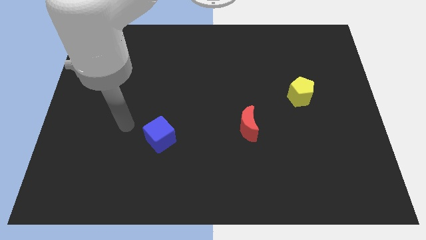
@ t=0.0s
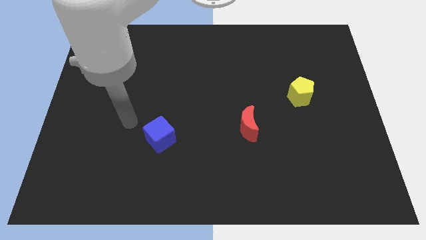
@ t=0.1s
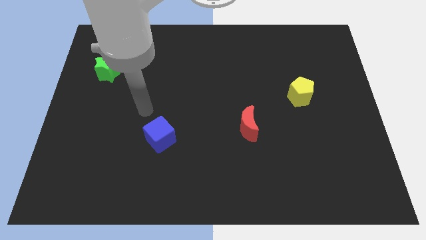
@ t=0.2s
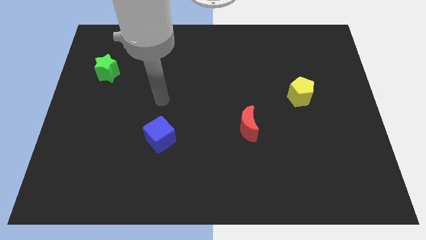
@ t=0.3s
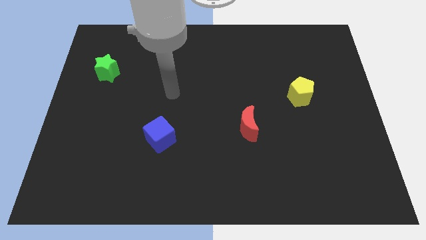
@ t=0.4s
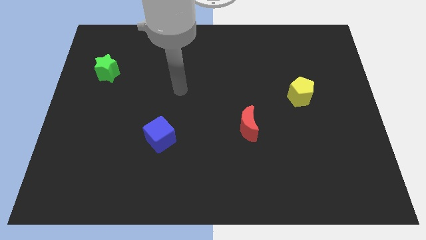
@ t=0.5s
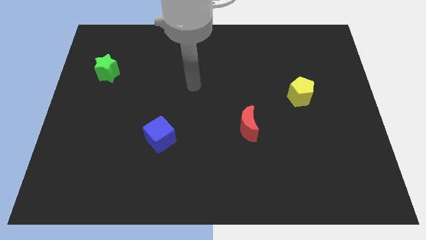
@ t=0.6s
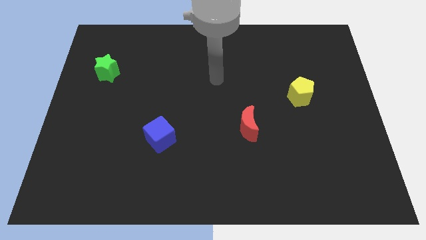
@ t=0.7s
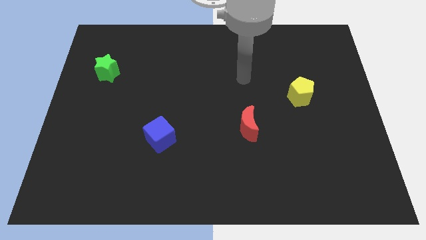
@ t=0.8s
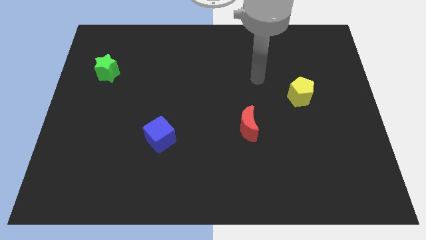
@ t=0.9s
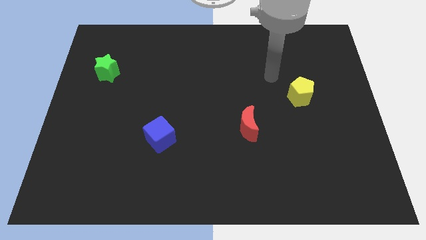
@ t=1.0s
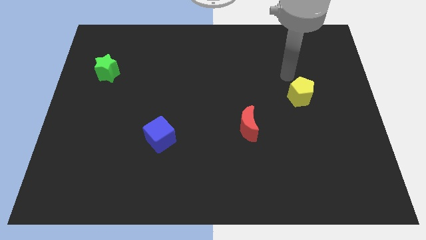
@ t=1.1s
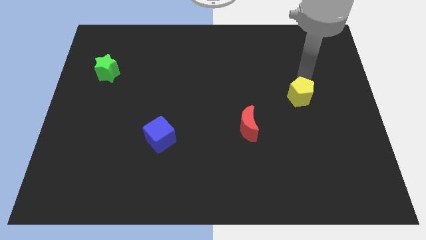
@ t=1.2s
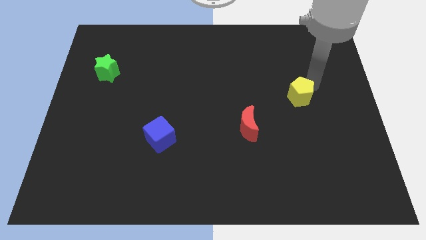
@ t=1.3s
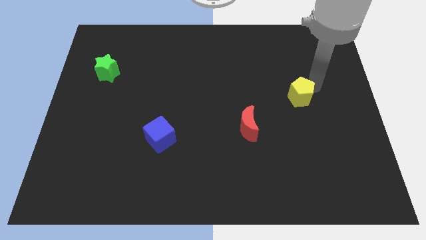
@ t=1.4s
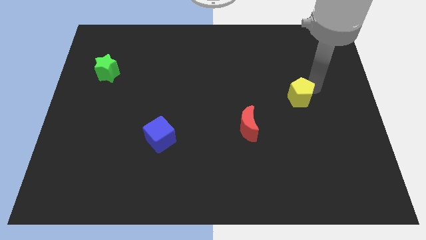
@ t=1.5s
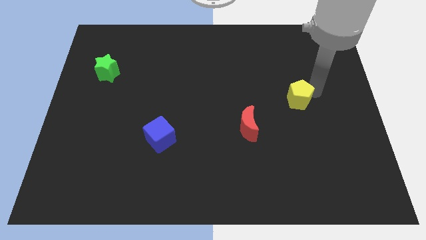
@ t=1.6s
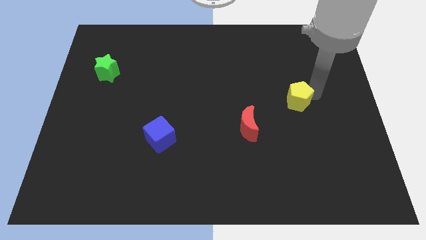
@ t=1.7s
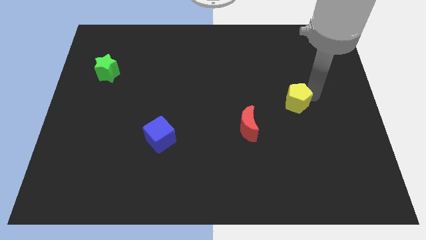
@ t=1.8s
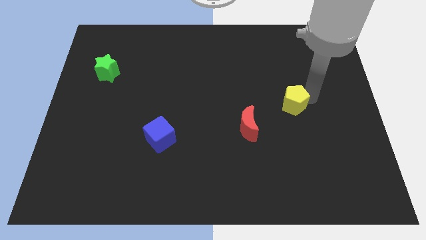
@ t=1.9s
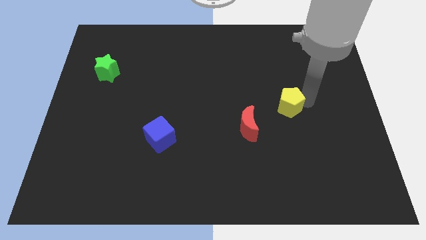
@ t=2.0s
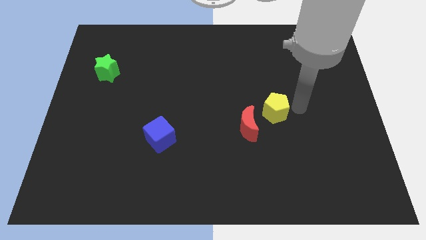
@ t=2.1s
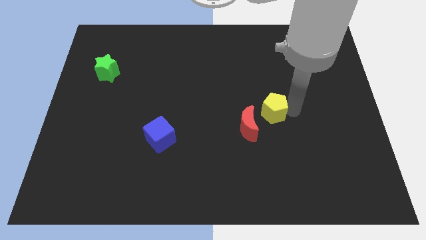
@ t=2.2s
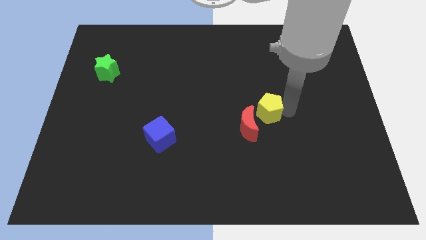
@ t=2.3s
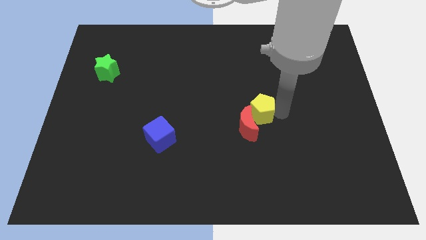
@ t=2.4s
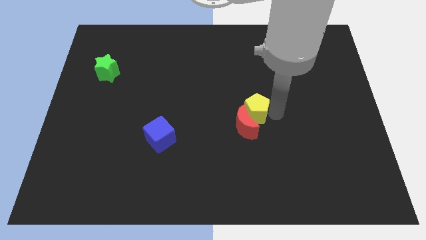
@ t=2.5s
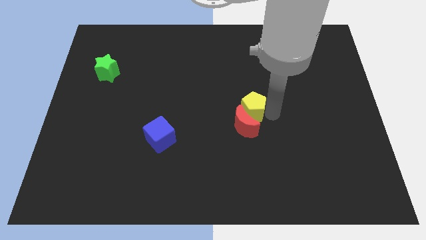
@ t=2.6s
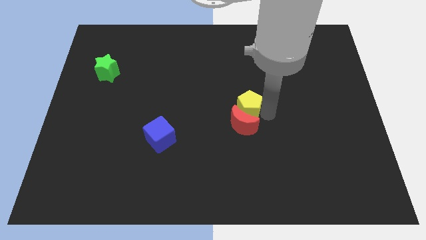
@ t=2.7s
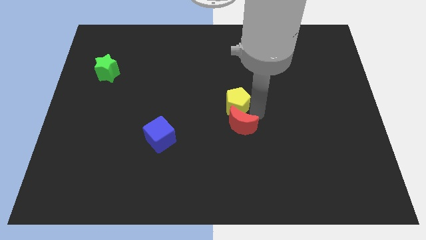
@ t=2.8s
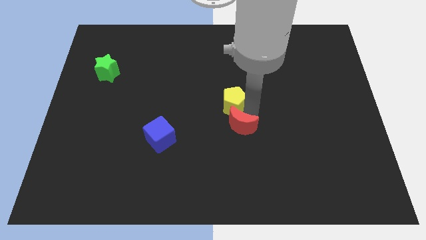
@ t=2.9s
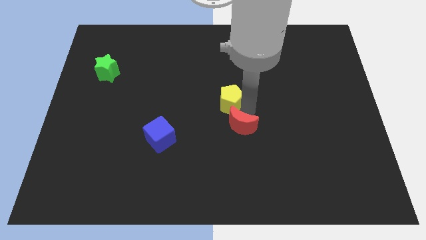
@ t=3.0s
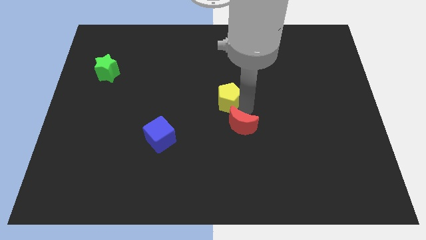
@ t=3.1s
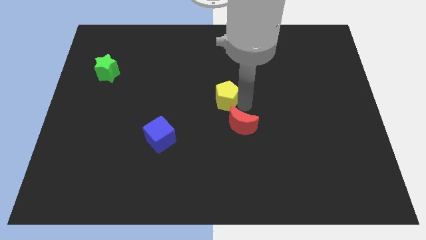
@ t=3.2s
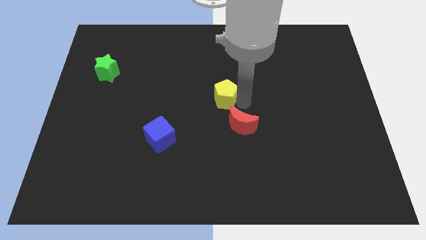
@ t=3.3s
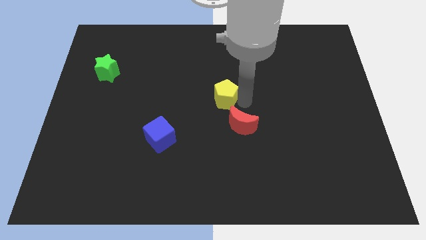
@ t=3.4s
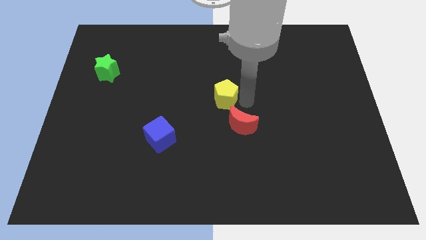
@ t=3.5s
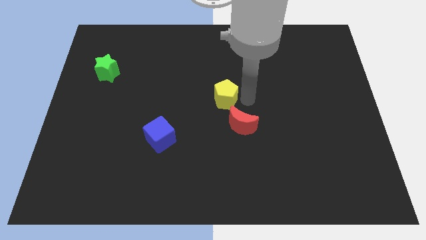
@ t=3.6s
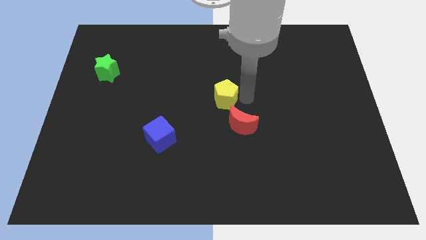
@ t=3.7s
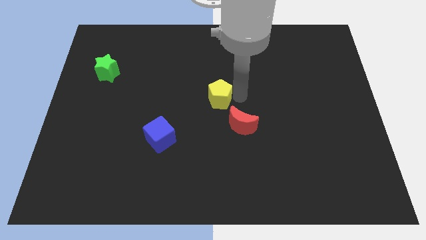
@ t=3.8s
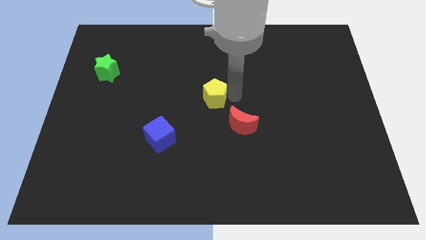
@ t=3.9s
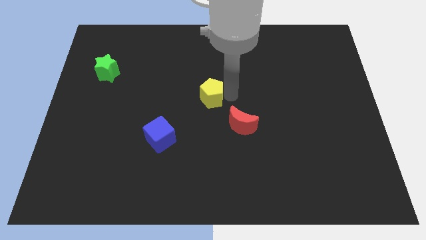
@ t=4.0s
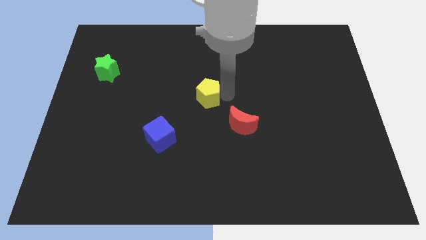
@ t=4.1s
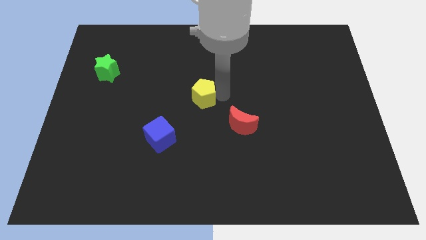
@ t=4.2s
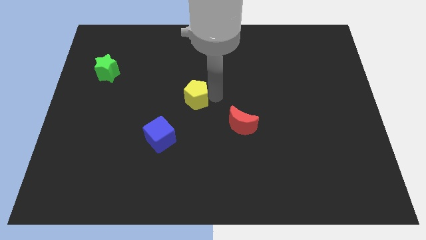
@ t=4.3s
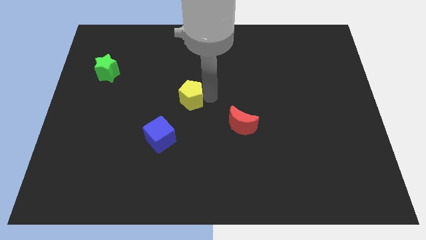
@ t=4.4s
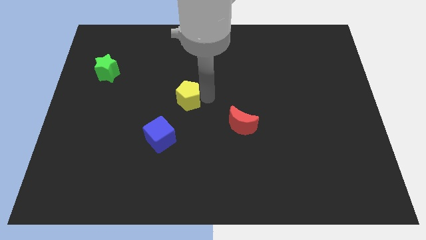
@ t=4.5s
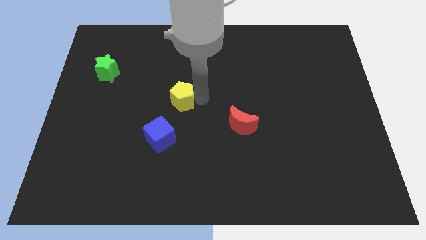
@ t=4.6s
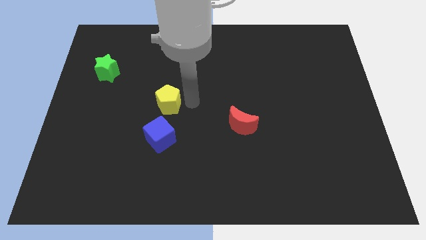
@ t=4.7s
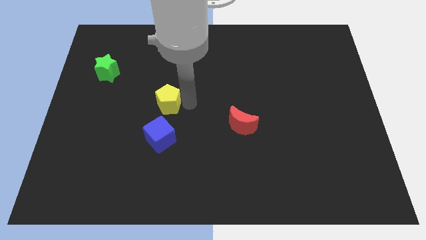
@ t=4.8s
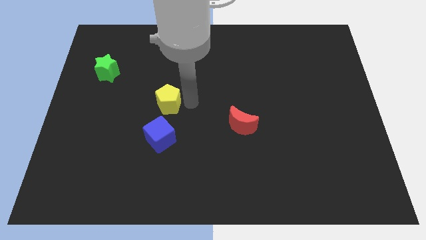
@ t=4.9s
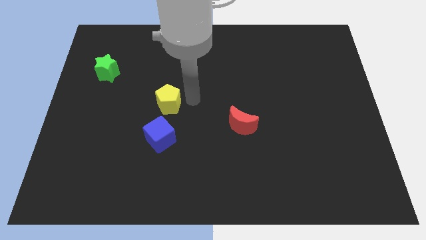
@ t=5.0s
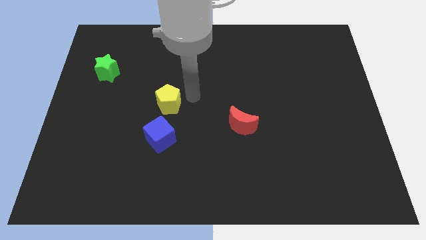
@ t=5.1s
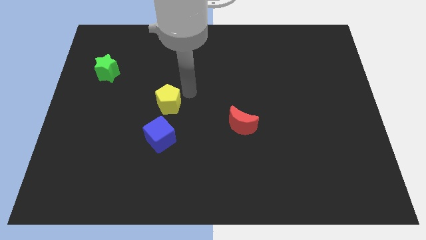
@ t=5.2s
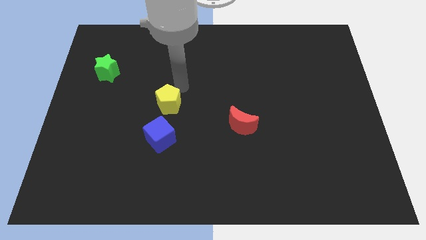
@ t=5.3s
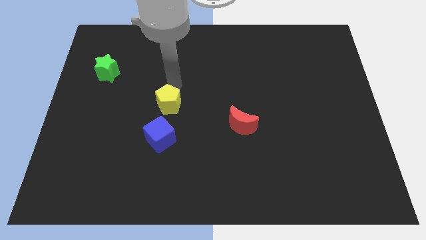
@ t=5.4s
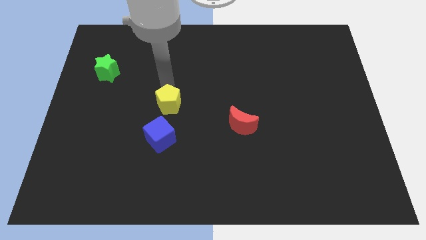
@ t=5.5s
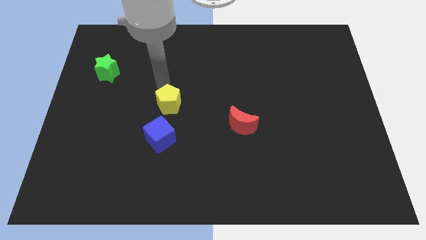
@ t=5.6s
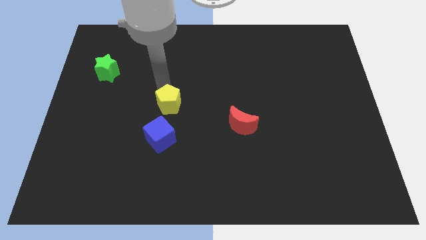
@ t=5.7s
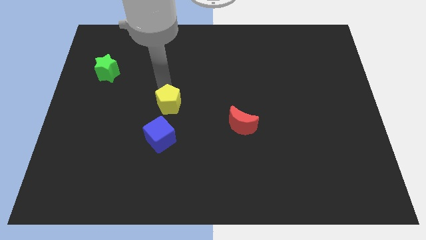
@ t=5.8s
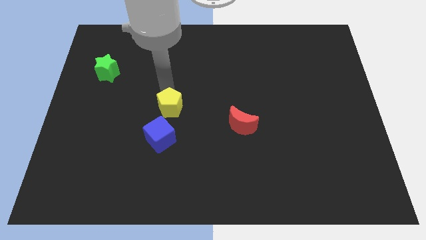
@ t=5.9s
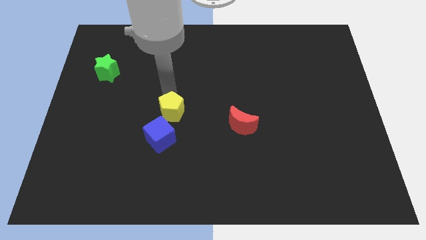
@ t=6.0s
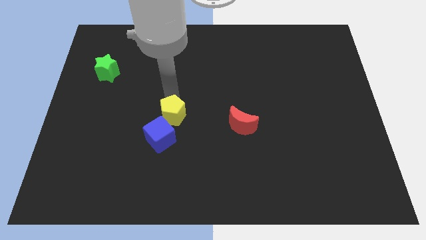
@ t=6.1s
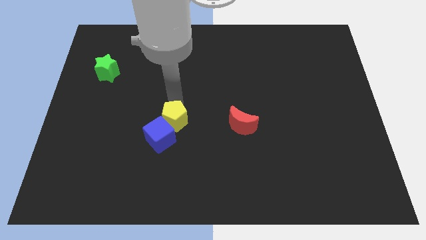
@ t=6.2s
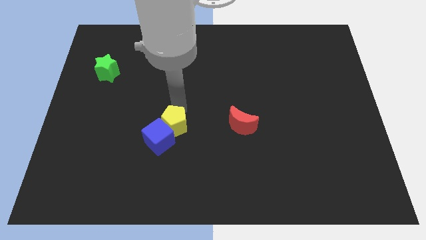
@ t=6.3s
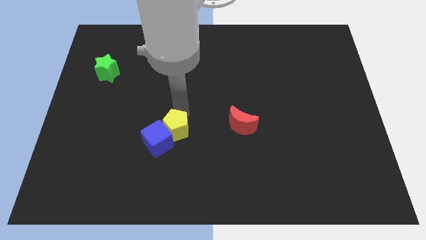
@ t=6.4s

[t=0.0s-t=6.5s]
move the pentagon towards the blue block

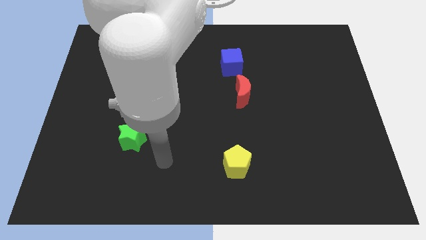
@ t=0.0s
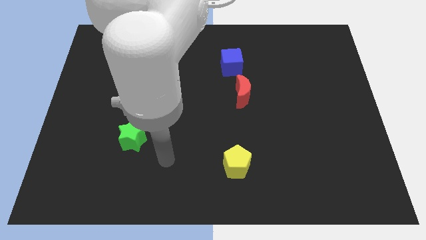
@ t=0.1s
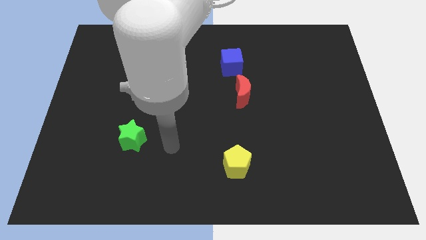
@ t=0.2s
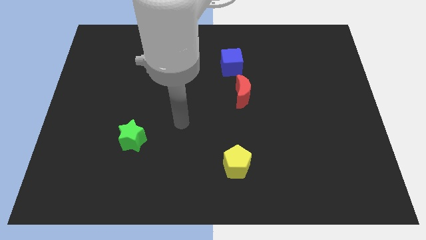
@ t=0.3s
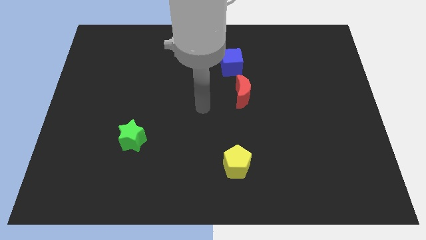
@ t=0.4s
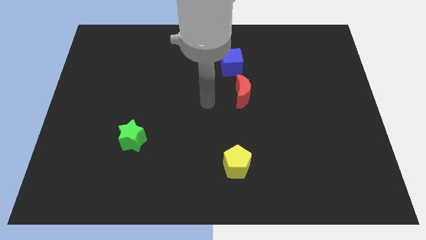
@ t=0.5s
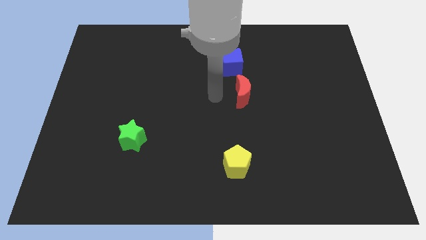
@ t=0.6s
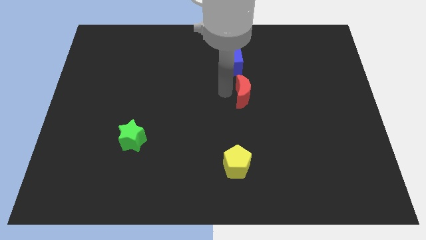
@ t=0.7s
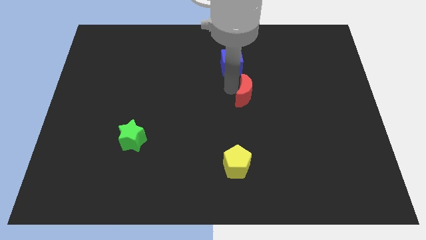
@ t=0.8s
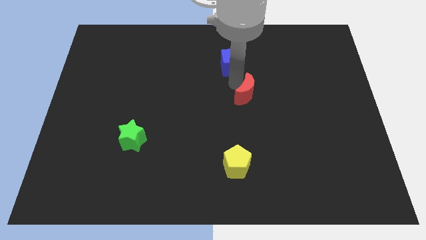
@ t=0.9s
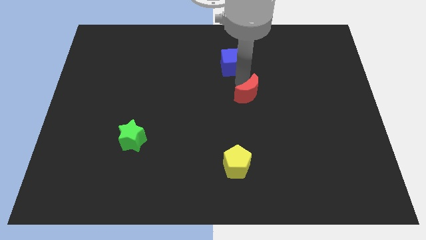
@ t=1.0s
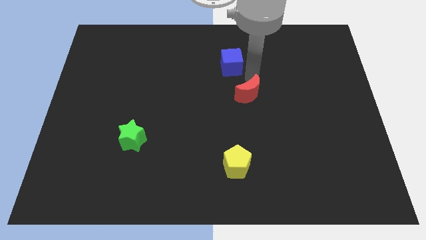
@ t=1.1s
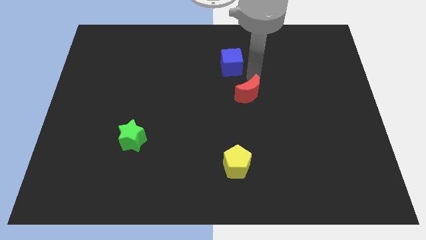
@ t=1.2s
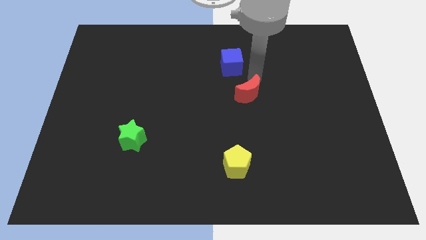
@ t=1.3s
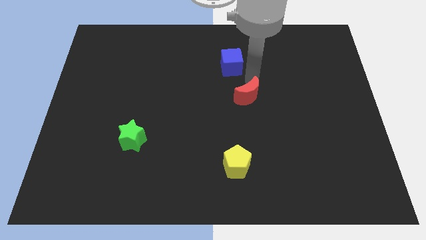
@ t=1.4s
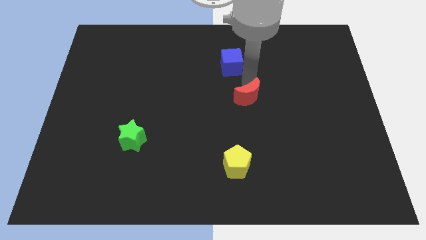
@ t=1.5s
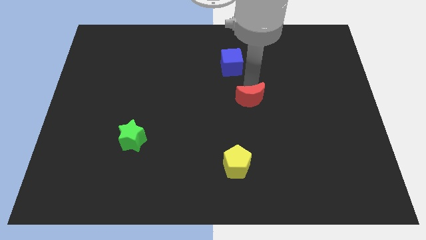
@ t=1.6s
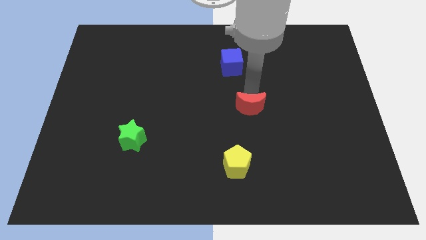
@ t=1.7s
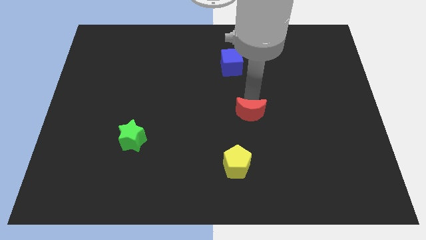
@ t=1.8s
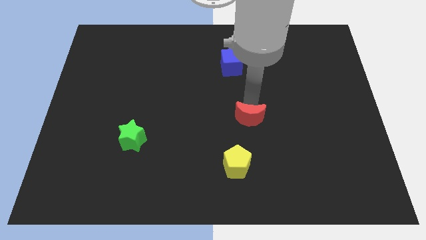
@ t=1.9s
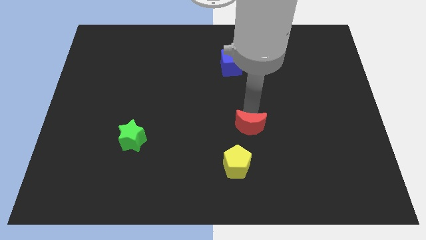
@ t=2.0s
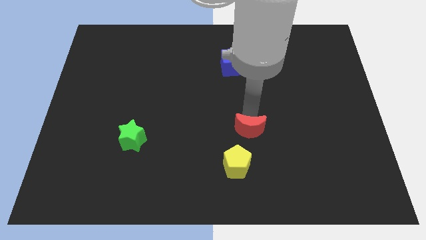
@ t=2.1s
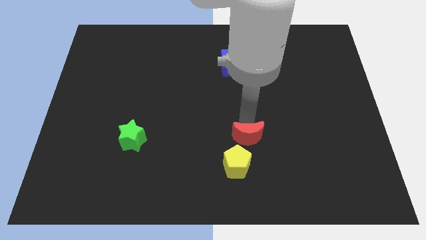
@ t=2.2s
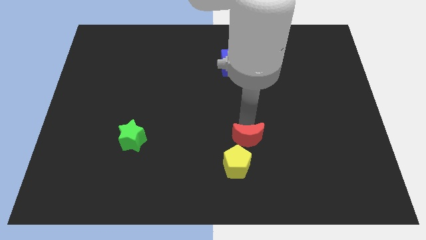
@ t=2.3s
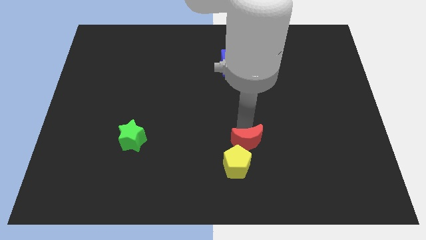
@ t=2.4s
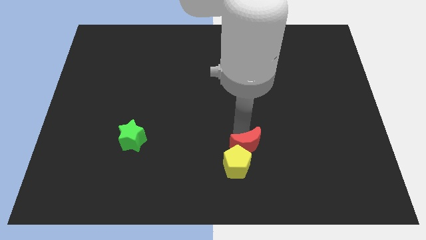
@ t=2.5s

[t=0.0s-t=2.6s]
push the red block close to the yellow pentagon
